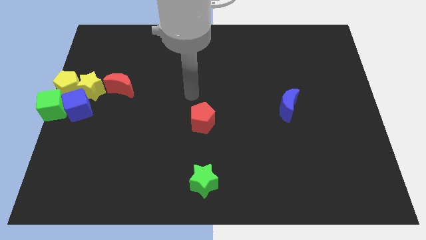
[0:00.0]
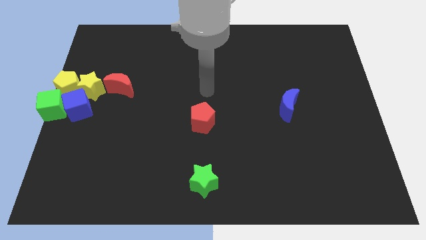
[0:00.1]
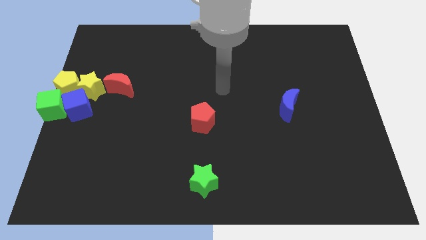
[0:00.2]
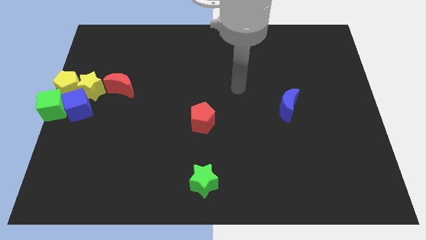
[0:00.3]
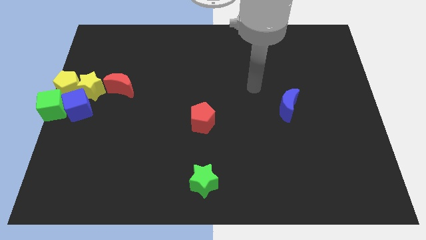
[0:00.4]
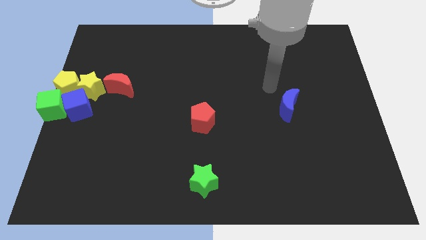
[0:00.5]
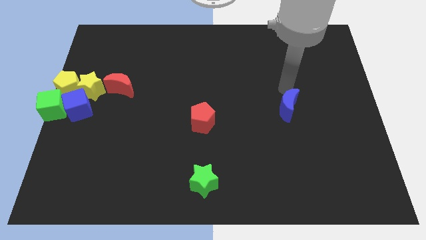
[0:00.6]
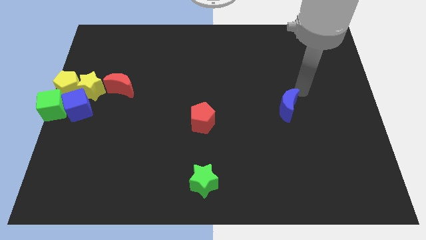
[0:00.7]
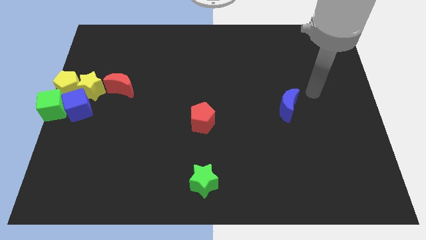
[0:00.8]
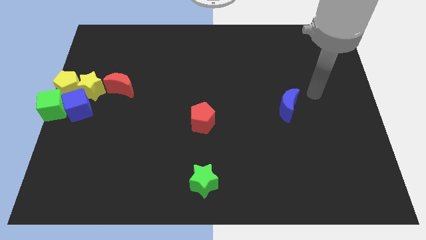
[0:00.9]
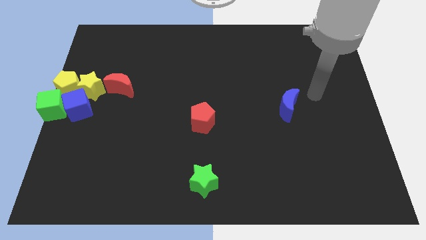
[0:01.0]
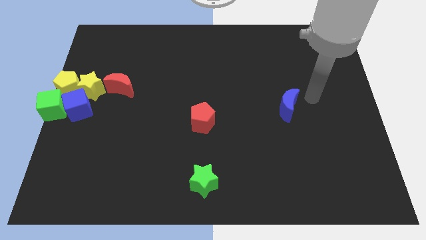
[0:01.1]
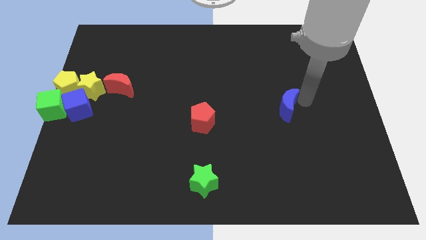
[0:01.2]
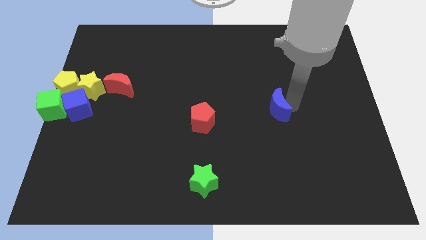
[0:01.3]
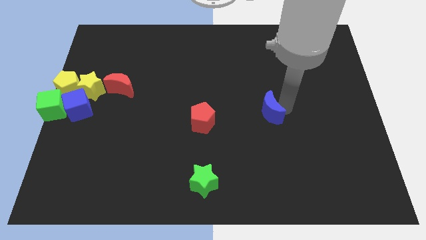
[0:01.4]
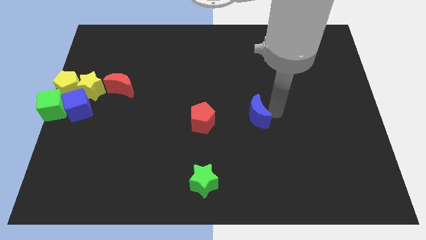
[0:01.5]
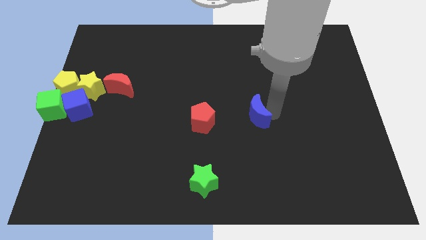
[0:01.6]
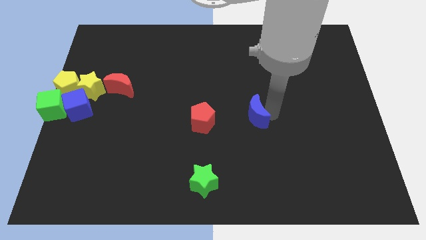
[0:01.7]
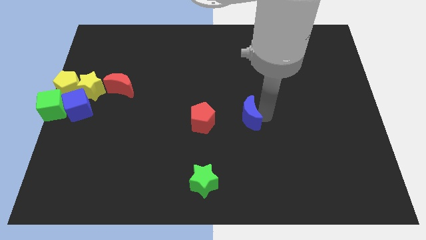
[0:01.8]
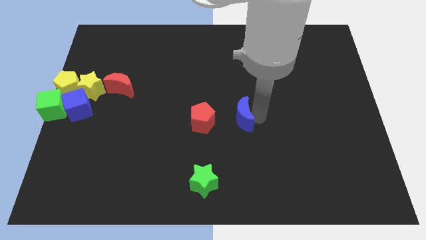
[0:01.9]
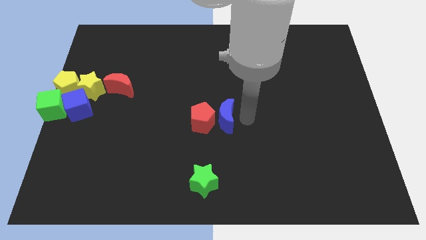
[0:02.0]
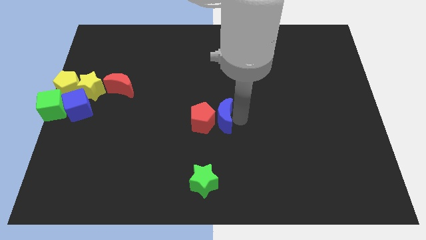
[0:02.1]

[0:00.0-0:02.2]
place the blue moon right to the red pentagon

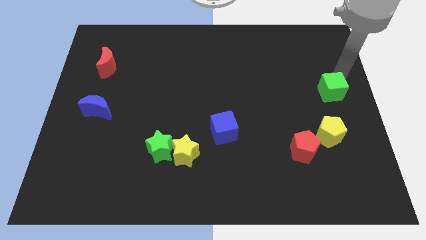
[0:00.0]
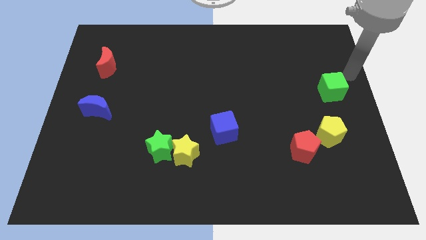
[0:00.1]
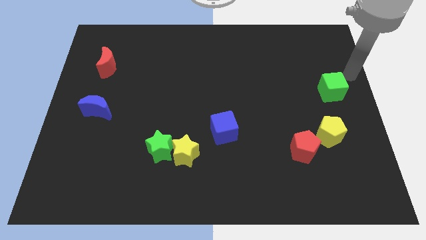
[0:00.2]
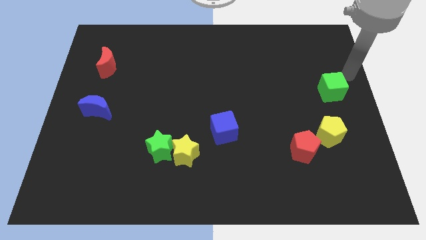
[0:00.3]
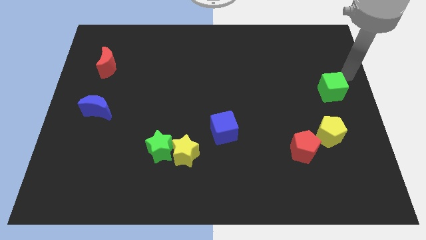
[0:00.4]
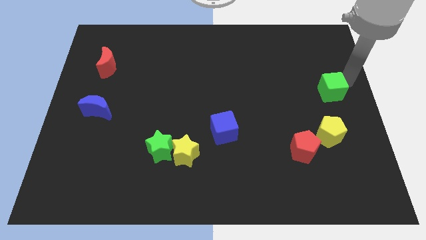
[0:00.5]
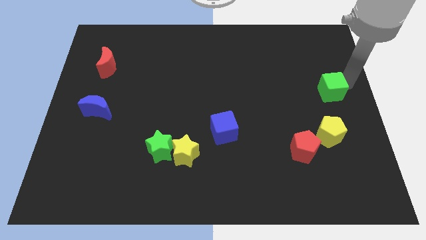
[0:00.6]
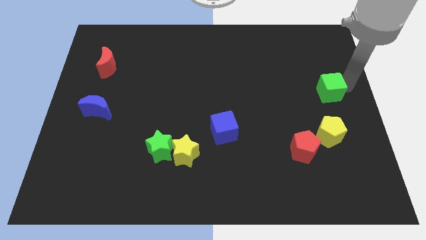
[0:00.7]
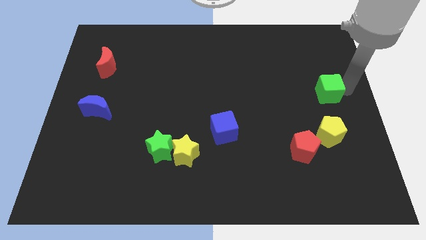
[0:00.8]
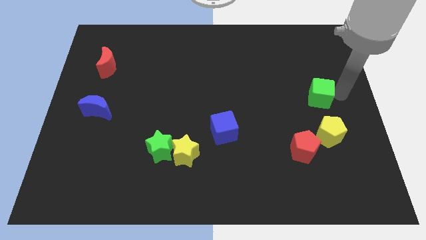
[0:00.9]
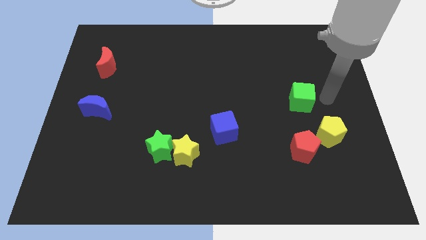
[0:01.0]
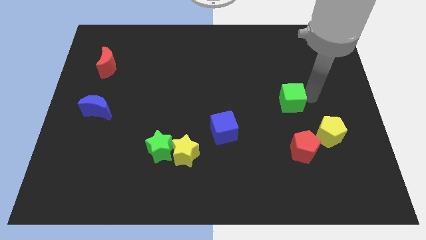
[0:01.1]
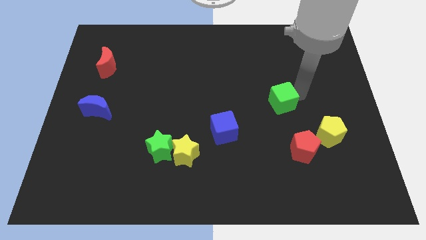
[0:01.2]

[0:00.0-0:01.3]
move green cube towards blue cube

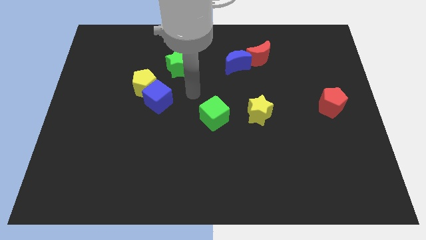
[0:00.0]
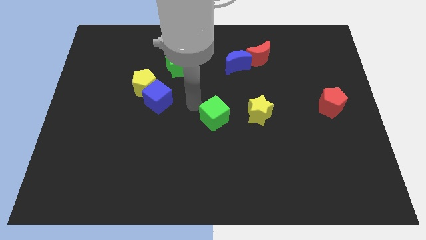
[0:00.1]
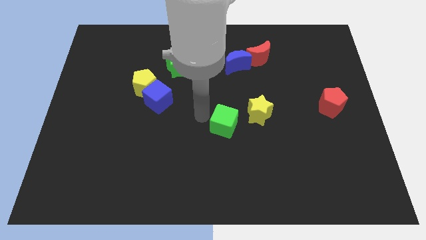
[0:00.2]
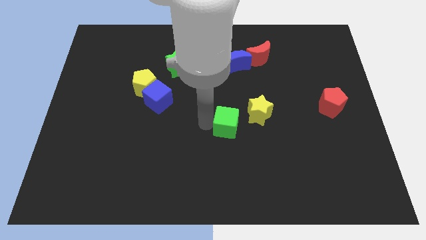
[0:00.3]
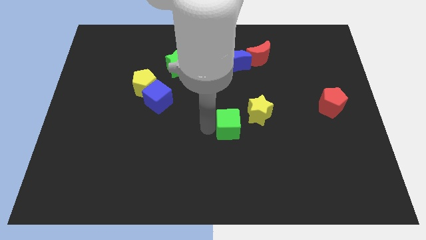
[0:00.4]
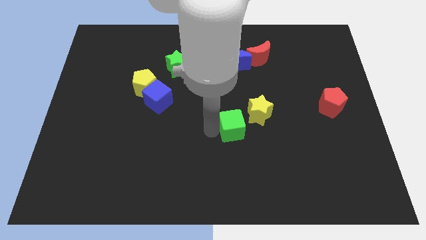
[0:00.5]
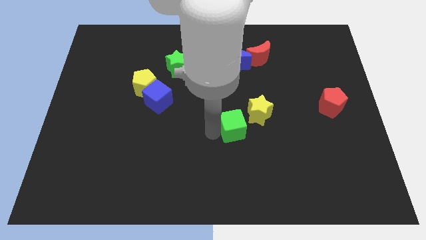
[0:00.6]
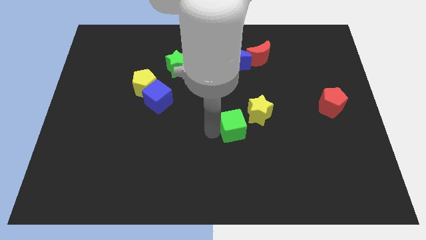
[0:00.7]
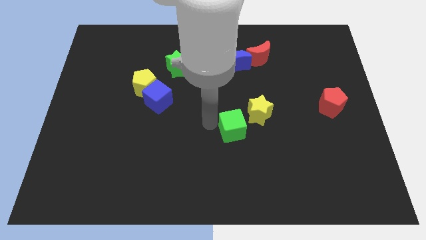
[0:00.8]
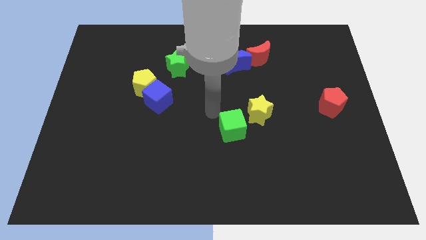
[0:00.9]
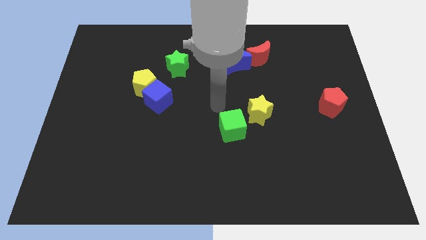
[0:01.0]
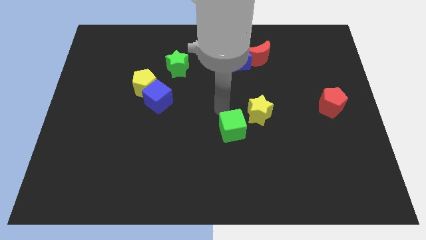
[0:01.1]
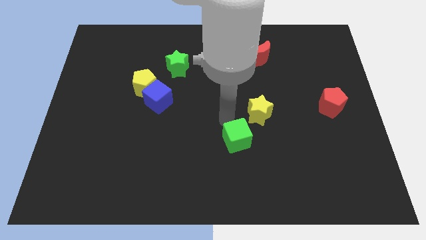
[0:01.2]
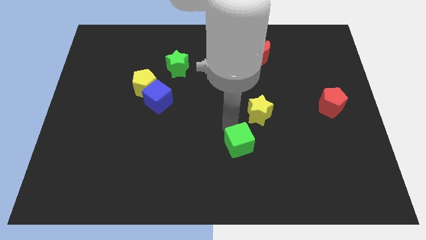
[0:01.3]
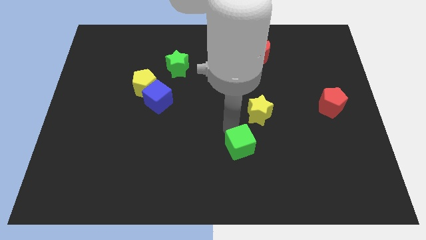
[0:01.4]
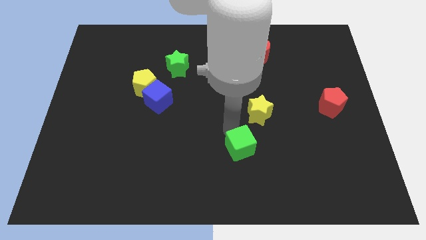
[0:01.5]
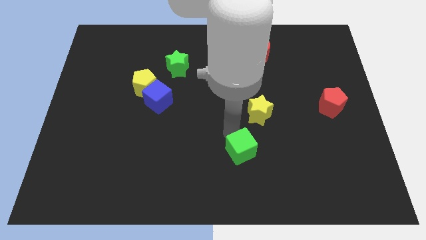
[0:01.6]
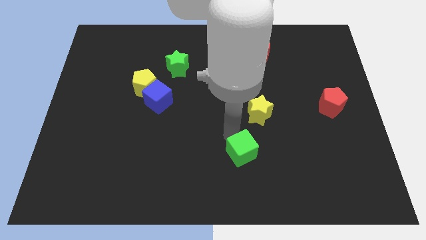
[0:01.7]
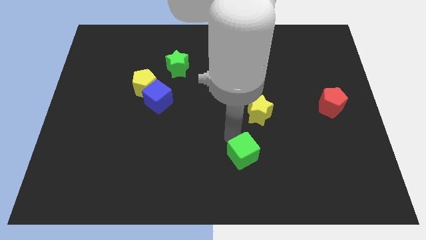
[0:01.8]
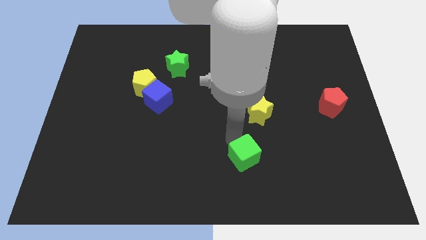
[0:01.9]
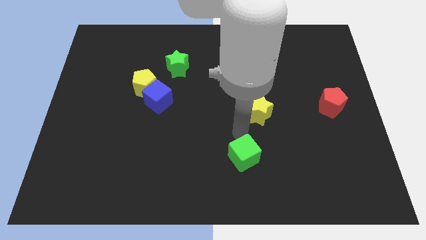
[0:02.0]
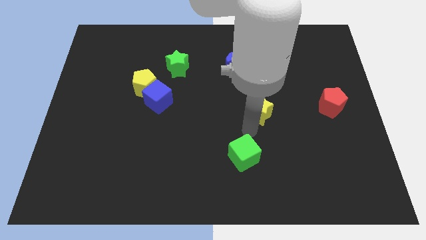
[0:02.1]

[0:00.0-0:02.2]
push green cube to the bottom of the yellow star

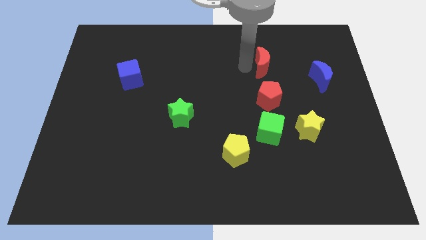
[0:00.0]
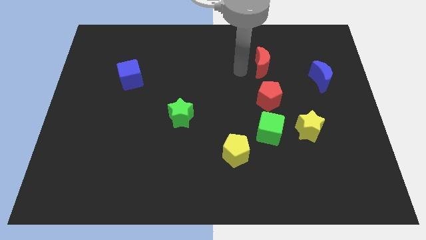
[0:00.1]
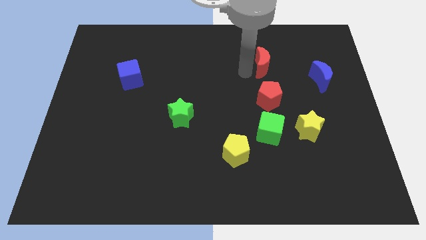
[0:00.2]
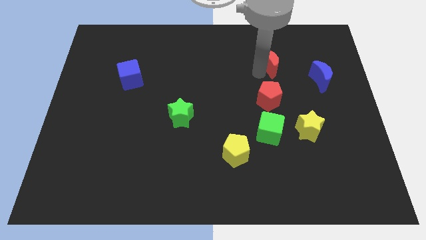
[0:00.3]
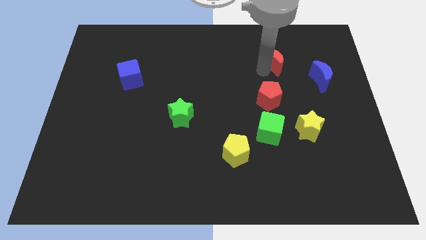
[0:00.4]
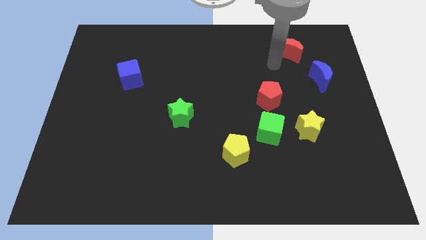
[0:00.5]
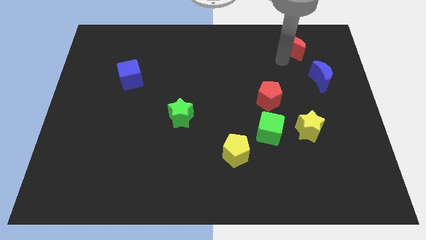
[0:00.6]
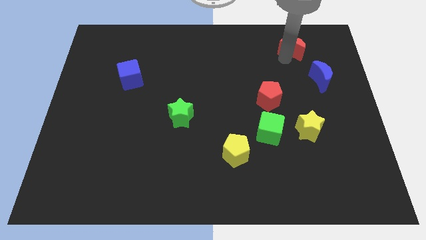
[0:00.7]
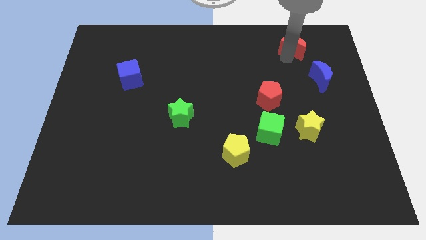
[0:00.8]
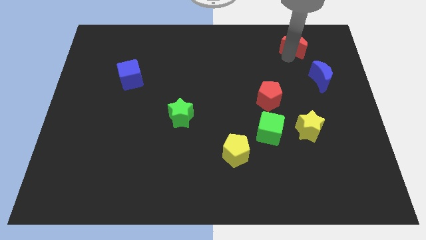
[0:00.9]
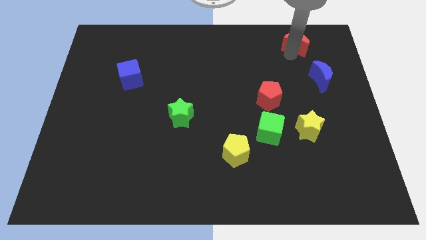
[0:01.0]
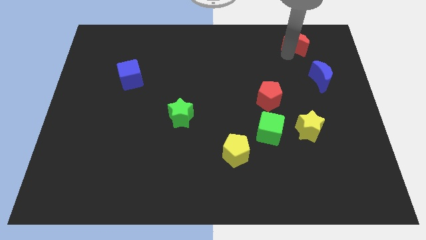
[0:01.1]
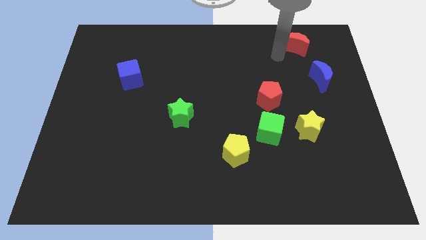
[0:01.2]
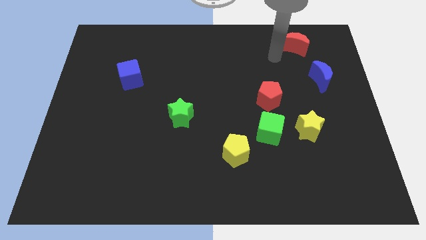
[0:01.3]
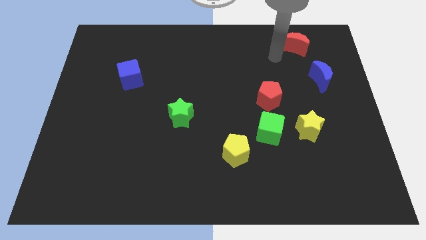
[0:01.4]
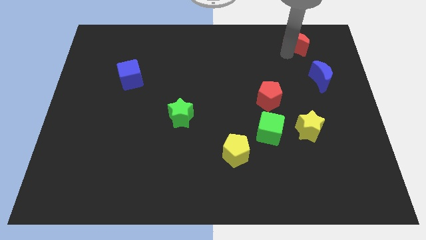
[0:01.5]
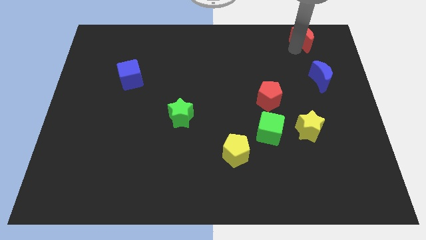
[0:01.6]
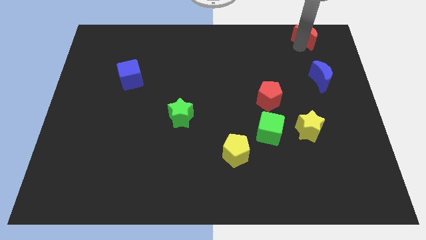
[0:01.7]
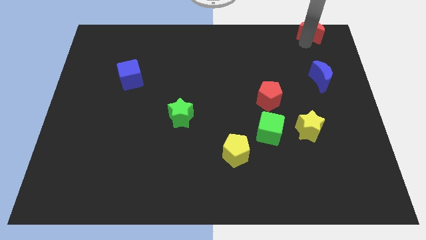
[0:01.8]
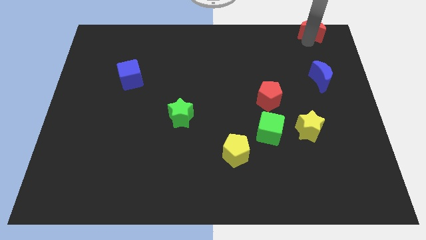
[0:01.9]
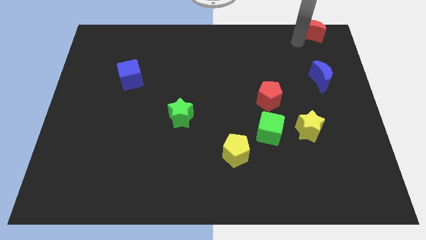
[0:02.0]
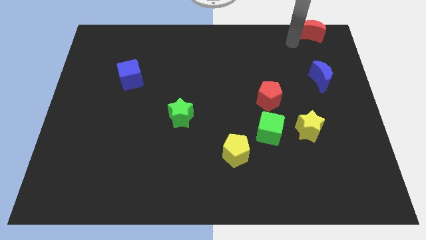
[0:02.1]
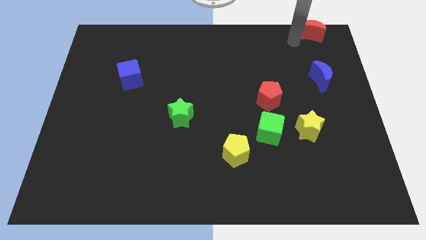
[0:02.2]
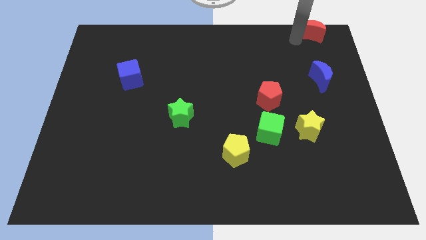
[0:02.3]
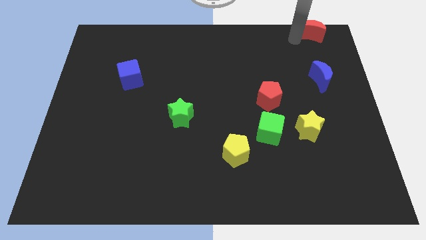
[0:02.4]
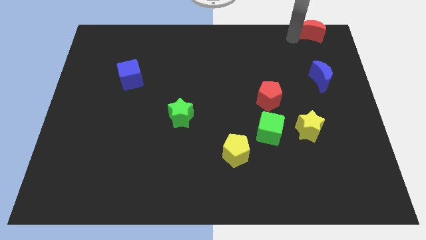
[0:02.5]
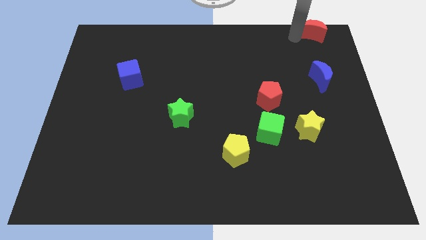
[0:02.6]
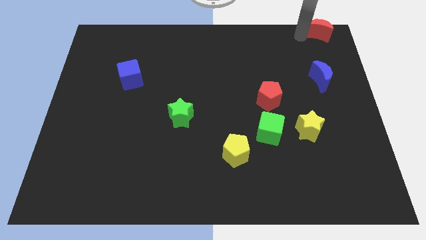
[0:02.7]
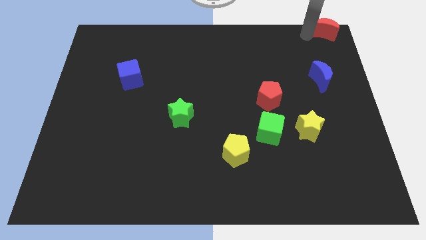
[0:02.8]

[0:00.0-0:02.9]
move the red moon to the top right

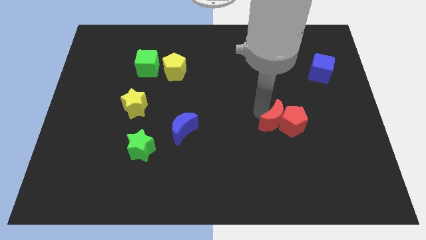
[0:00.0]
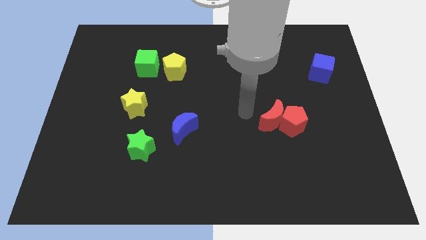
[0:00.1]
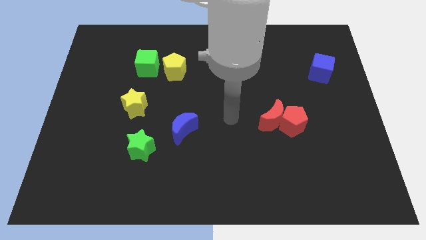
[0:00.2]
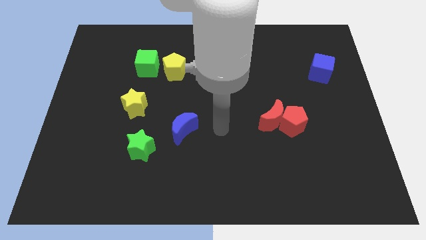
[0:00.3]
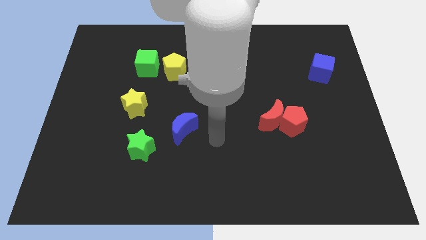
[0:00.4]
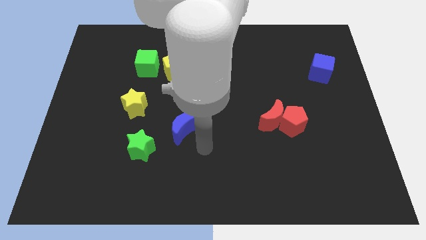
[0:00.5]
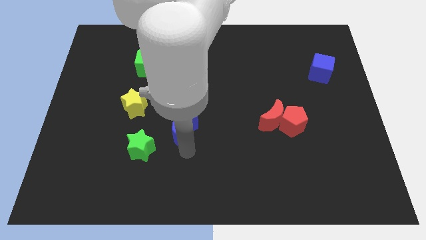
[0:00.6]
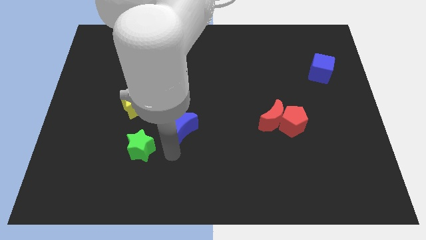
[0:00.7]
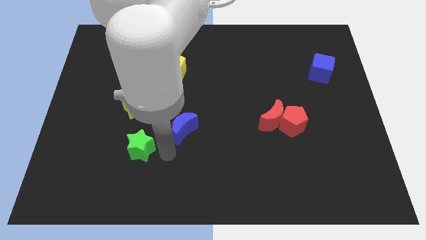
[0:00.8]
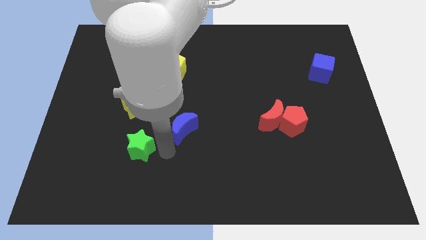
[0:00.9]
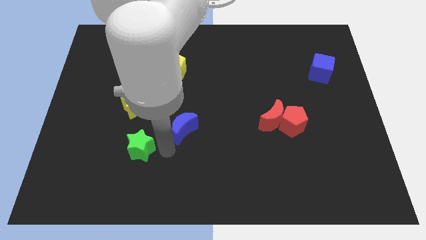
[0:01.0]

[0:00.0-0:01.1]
move your hand towards the blue crescent
